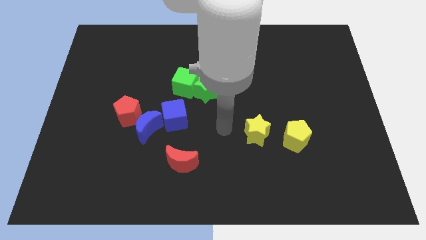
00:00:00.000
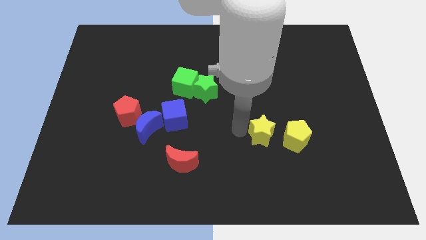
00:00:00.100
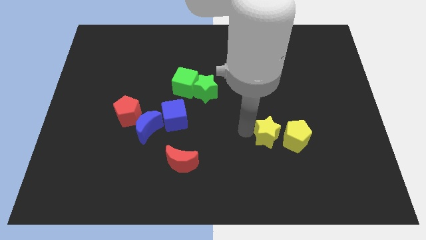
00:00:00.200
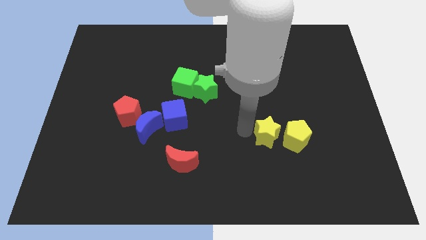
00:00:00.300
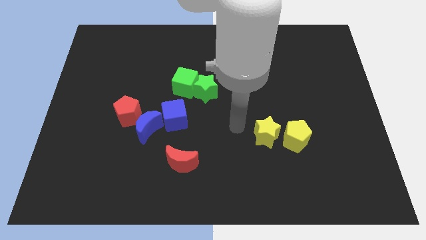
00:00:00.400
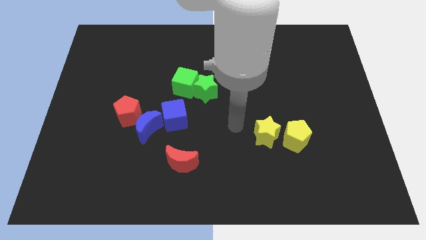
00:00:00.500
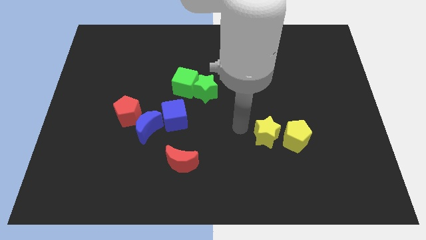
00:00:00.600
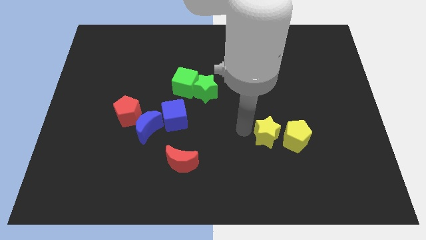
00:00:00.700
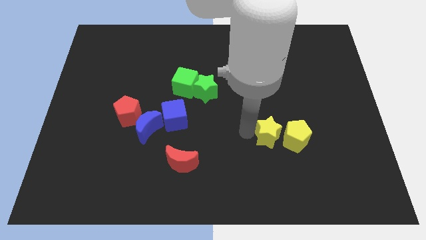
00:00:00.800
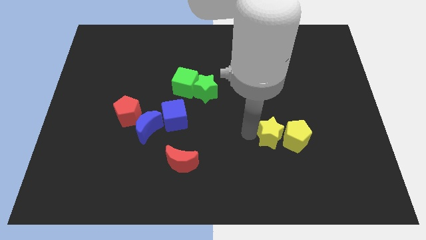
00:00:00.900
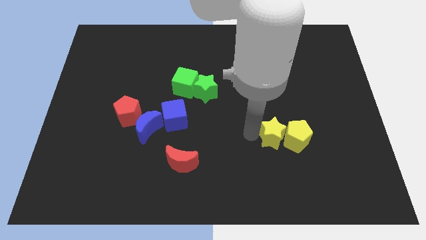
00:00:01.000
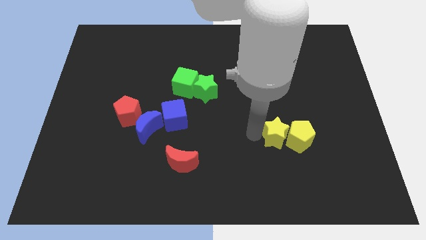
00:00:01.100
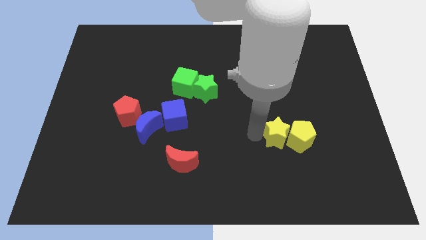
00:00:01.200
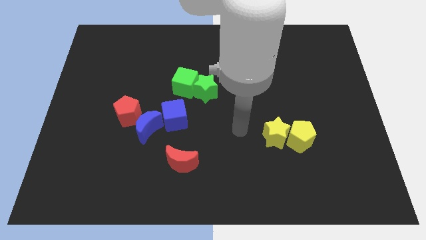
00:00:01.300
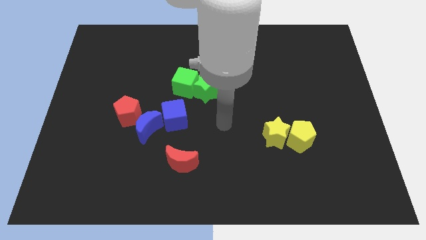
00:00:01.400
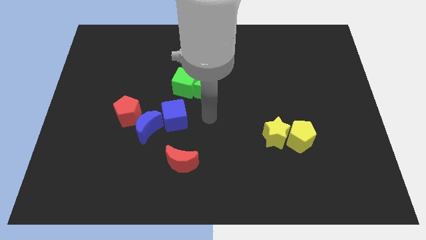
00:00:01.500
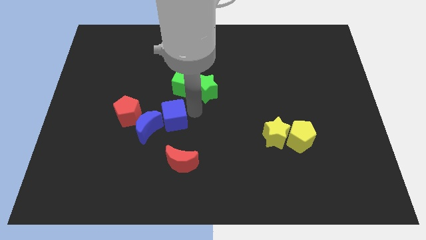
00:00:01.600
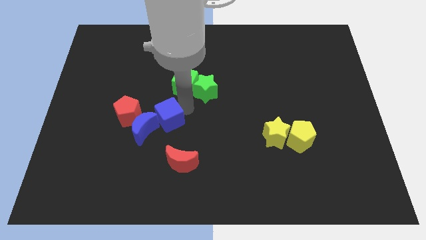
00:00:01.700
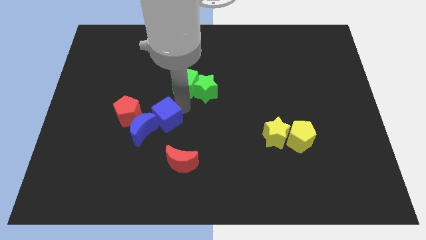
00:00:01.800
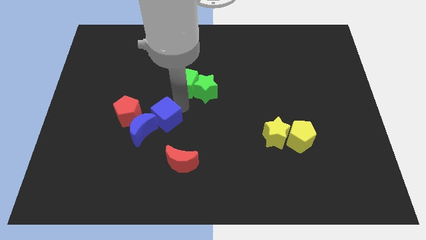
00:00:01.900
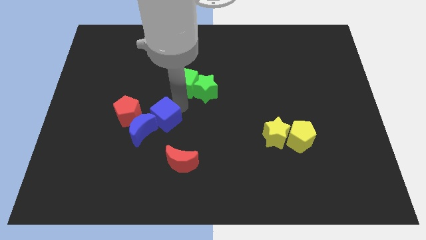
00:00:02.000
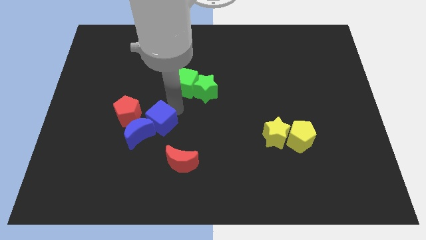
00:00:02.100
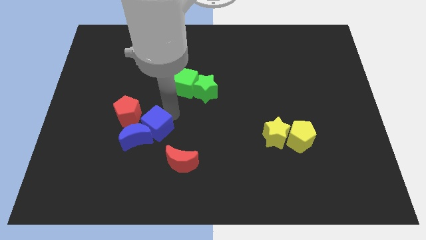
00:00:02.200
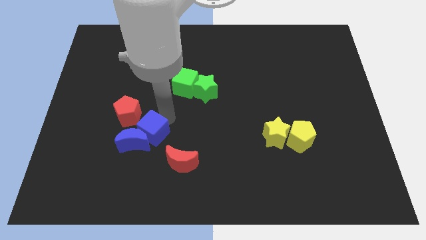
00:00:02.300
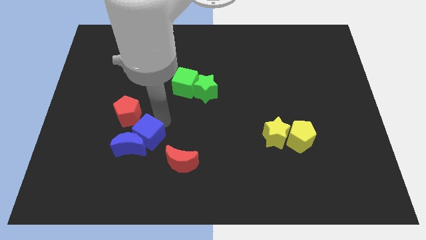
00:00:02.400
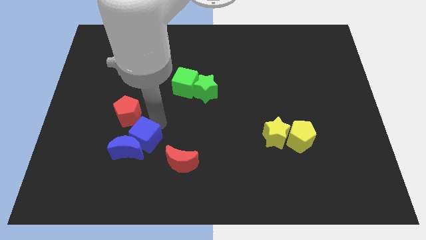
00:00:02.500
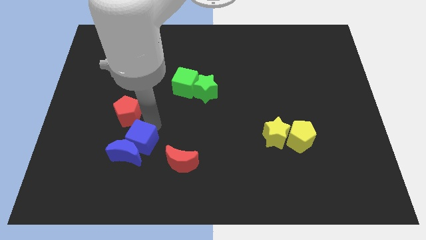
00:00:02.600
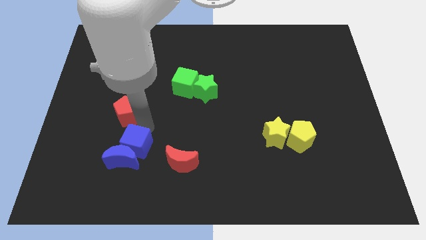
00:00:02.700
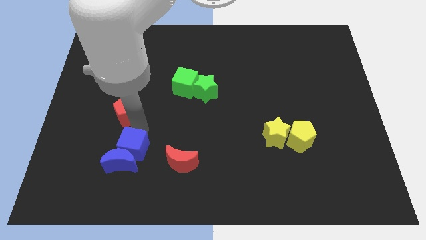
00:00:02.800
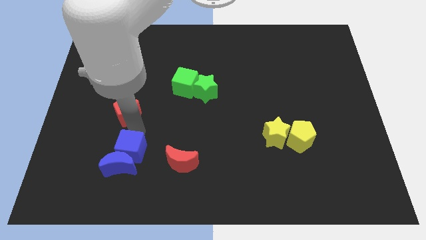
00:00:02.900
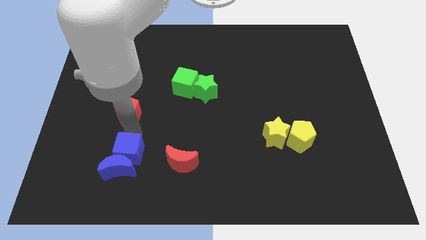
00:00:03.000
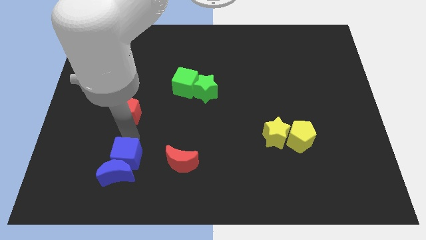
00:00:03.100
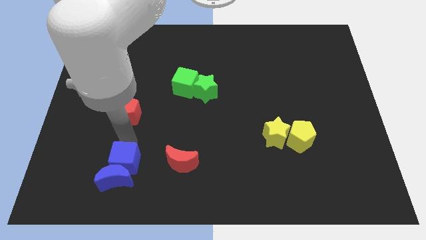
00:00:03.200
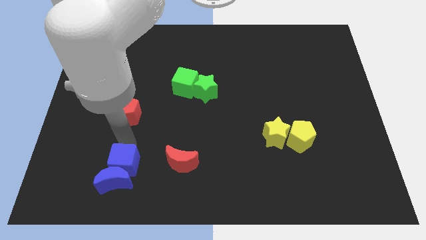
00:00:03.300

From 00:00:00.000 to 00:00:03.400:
drag the blue cube horizontally to the left side of the red crescent

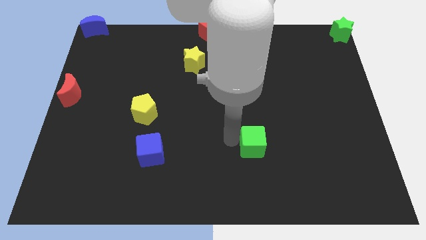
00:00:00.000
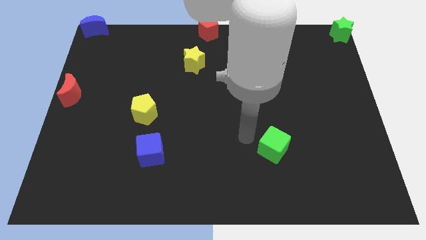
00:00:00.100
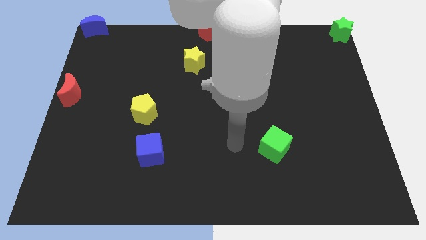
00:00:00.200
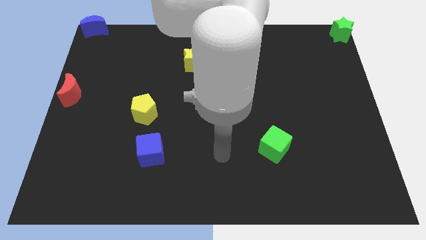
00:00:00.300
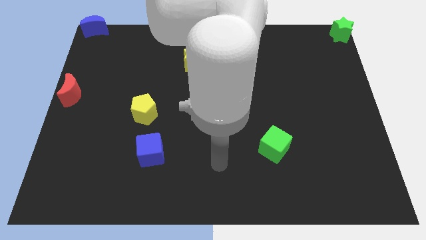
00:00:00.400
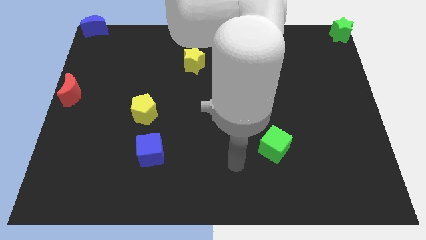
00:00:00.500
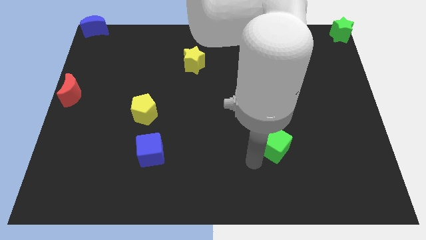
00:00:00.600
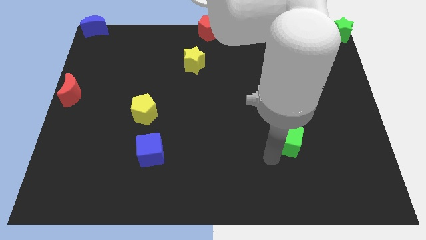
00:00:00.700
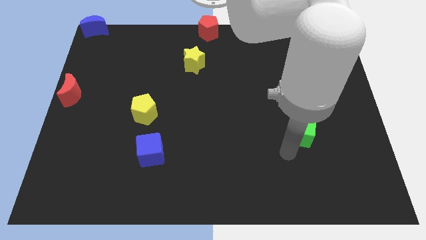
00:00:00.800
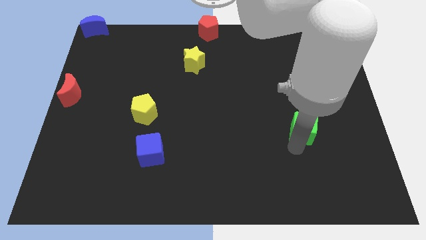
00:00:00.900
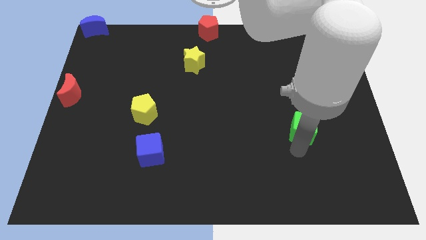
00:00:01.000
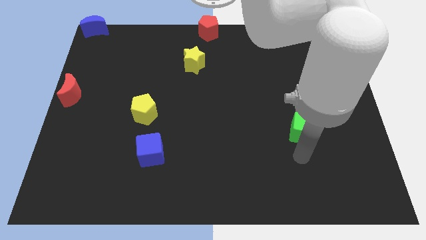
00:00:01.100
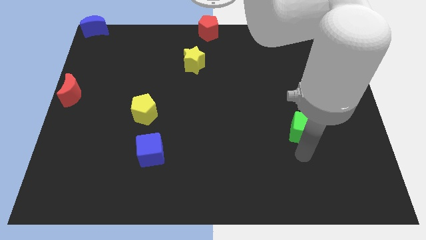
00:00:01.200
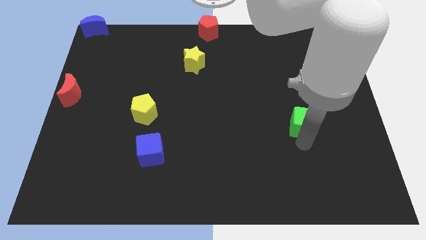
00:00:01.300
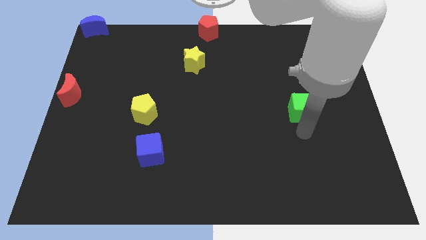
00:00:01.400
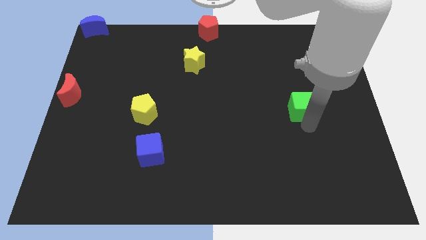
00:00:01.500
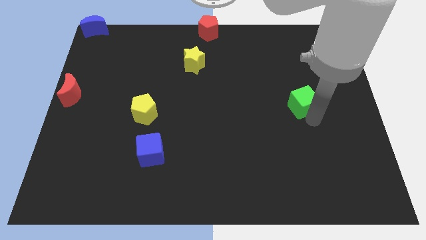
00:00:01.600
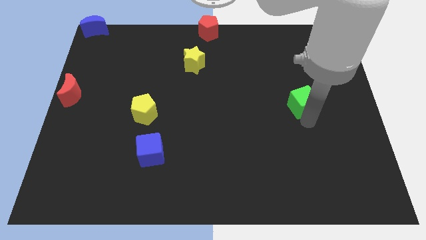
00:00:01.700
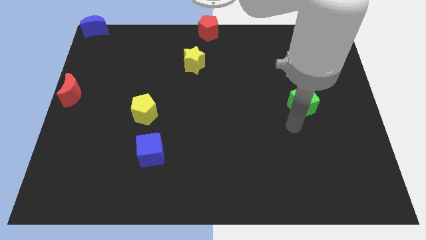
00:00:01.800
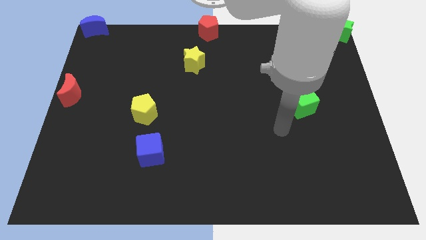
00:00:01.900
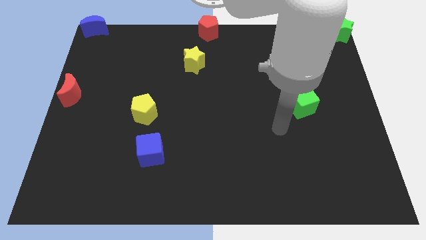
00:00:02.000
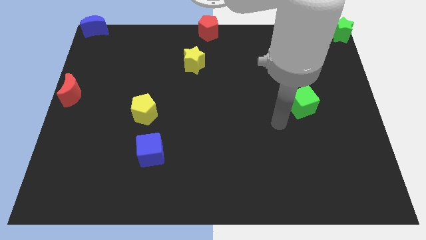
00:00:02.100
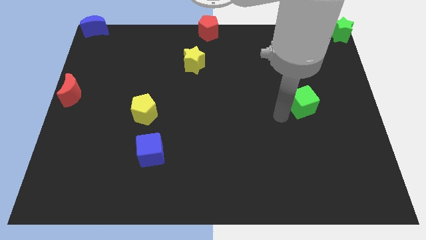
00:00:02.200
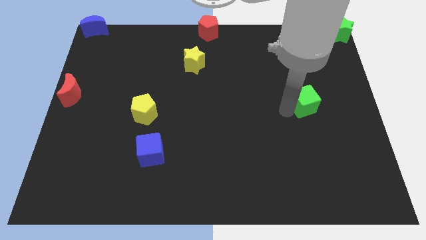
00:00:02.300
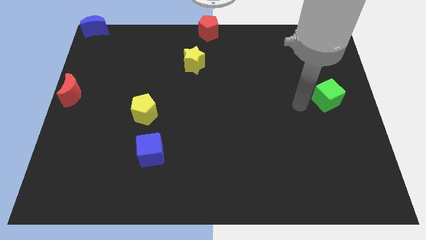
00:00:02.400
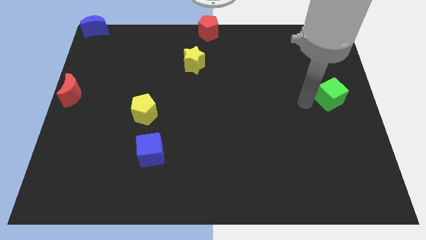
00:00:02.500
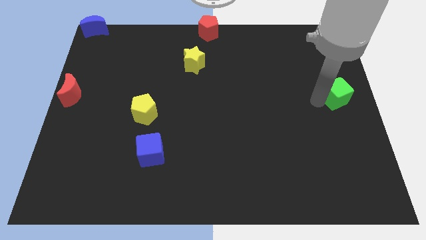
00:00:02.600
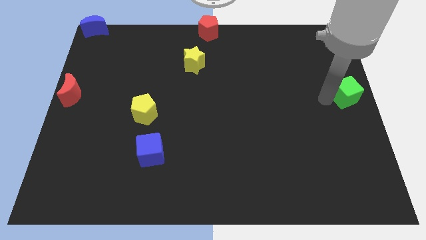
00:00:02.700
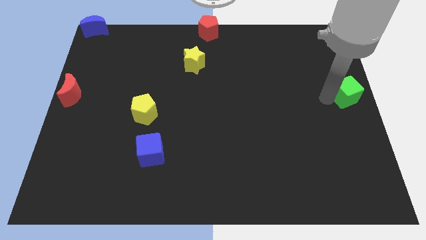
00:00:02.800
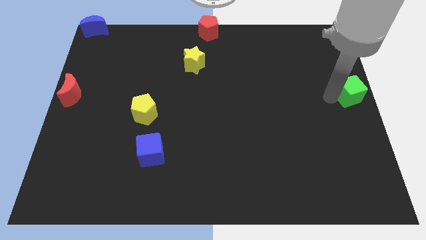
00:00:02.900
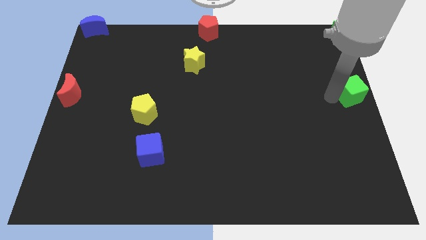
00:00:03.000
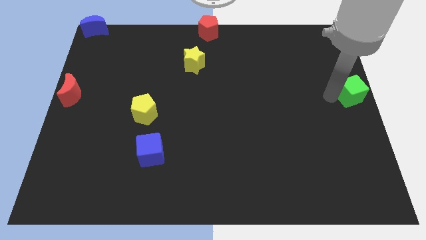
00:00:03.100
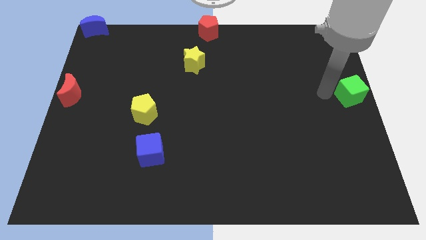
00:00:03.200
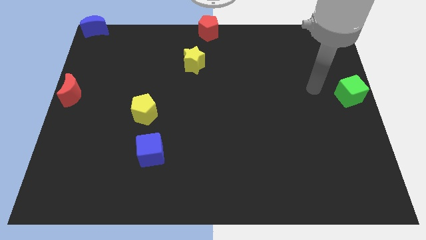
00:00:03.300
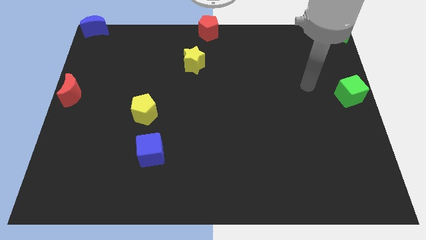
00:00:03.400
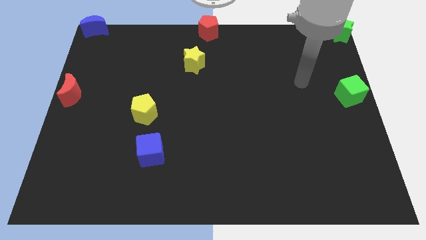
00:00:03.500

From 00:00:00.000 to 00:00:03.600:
push the green cube to the right side of the board

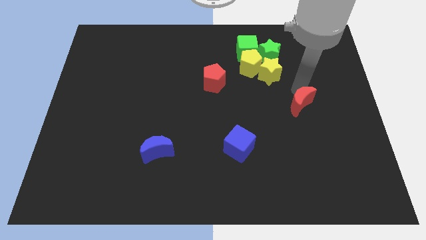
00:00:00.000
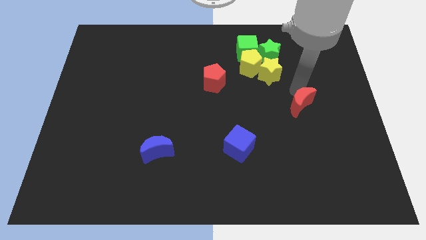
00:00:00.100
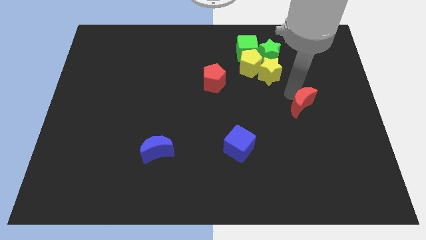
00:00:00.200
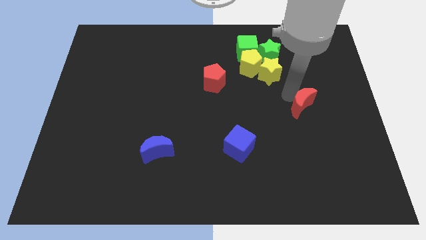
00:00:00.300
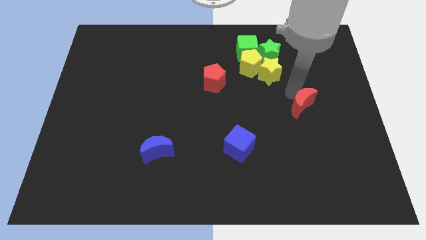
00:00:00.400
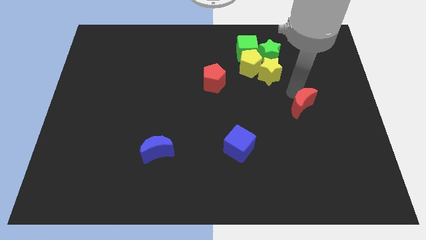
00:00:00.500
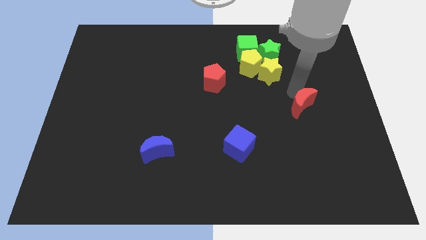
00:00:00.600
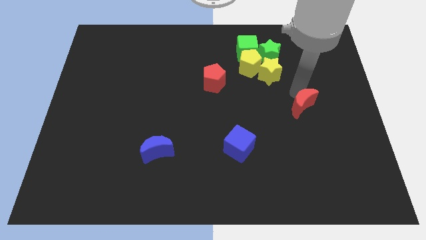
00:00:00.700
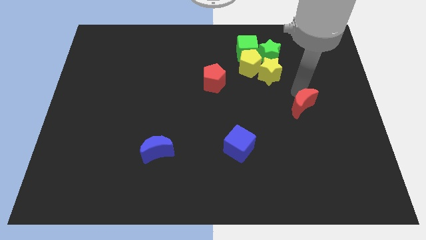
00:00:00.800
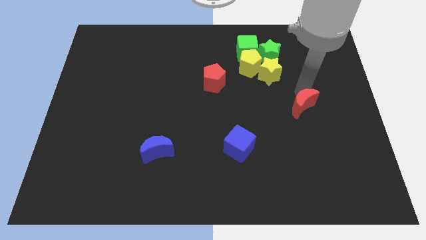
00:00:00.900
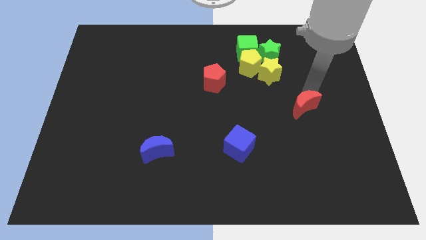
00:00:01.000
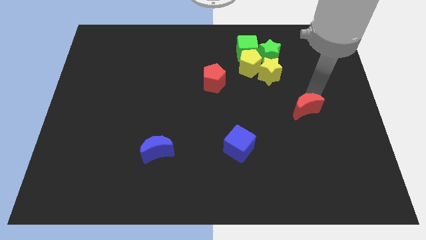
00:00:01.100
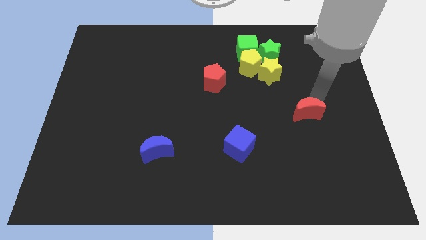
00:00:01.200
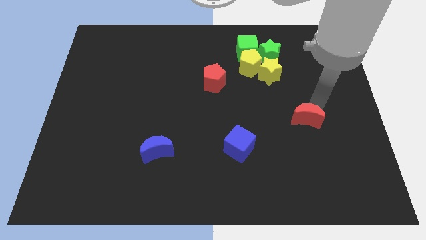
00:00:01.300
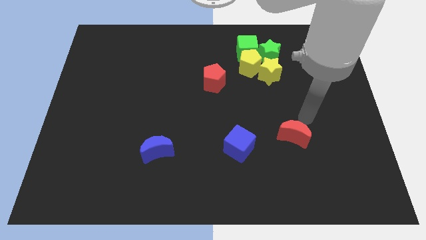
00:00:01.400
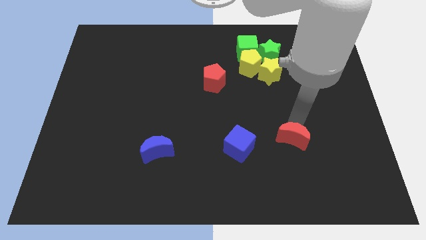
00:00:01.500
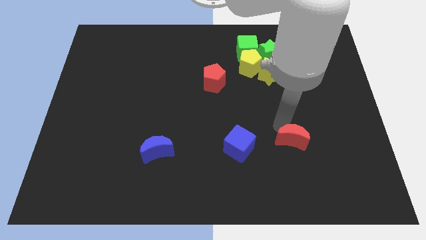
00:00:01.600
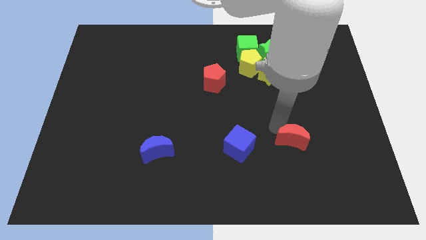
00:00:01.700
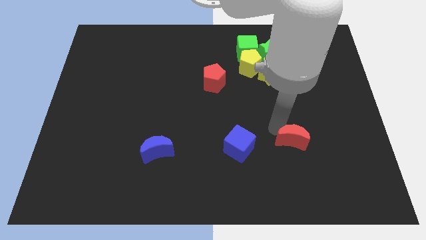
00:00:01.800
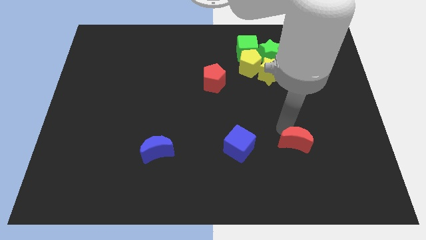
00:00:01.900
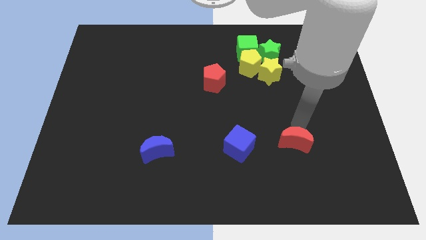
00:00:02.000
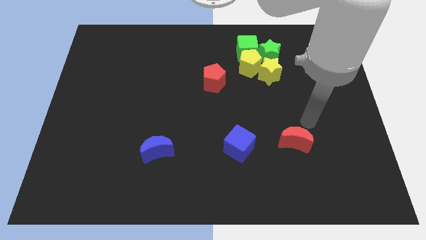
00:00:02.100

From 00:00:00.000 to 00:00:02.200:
move the red crescent to the right of blue cube
